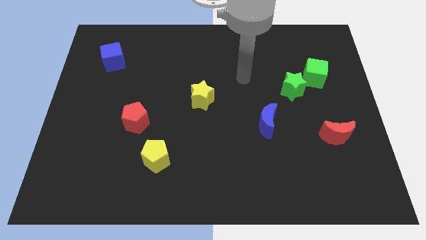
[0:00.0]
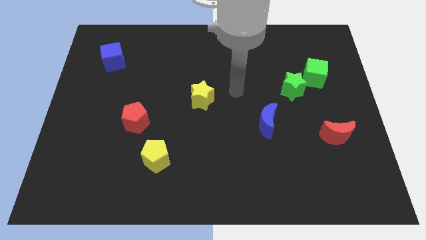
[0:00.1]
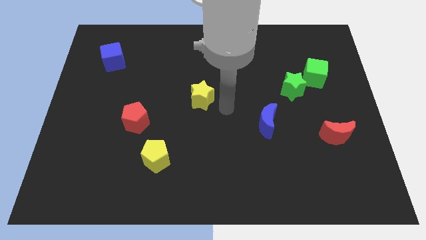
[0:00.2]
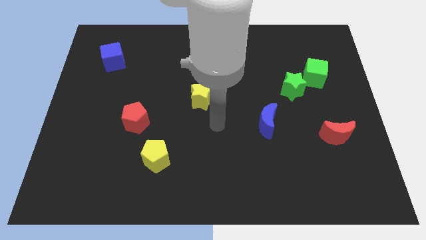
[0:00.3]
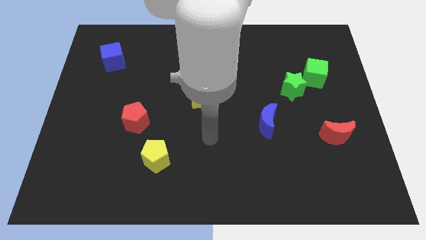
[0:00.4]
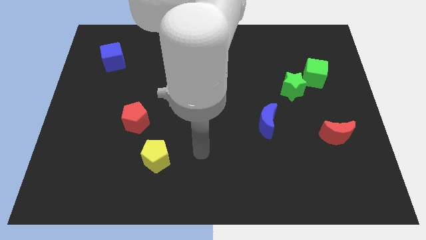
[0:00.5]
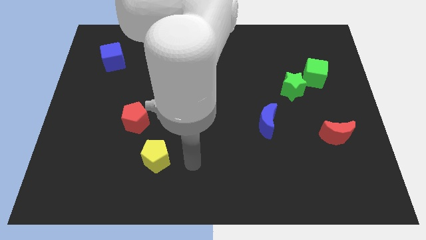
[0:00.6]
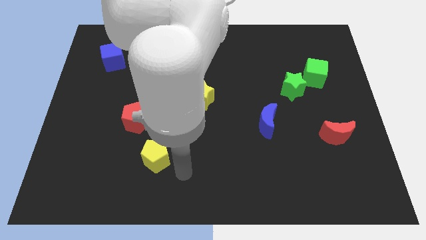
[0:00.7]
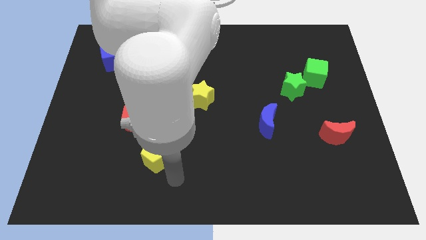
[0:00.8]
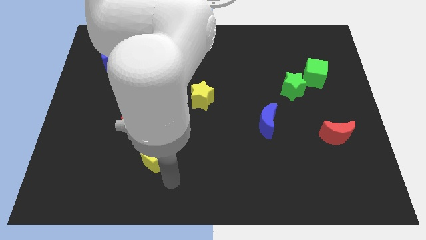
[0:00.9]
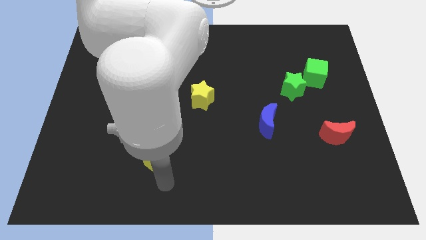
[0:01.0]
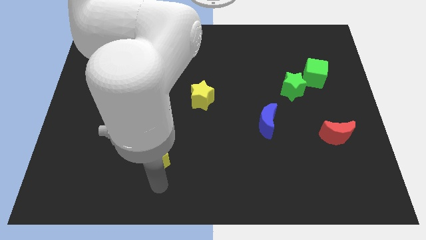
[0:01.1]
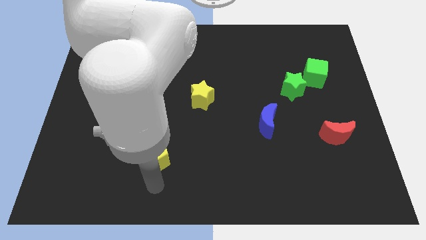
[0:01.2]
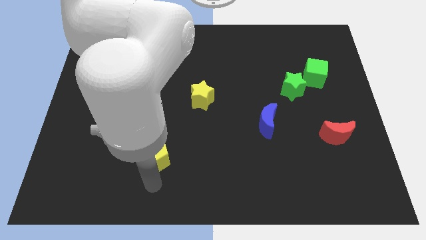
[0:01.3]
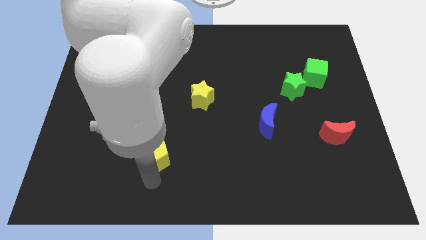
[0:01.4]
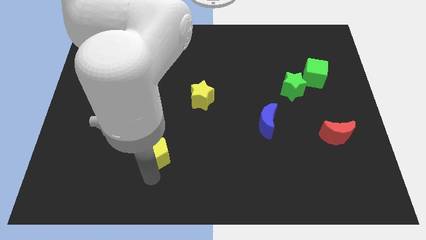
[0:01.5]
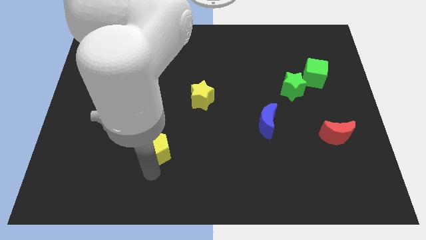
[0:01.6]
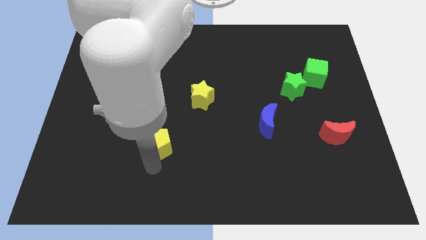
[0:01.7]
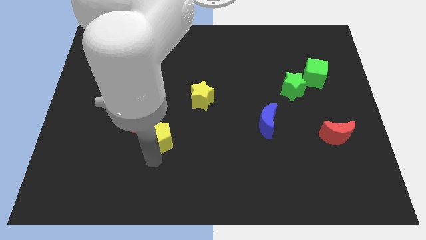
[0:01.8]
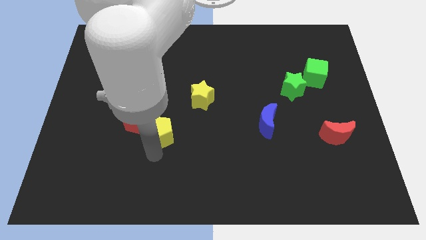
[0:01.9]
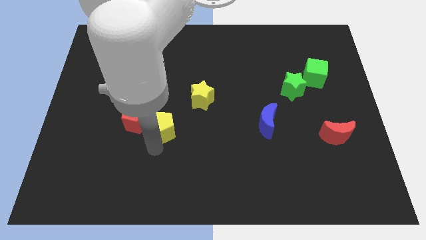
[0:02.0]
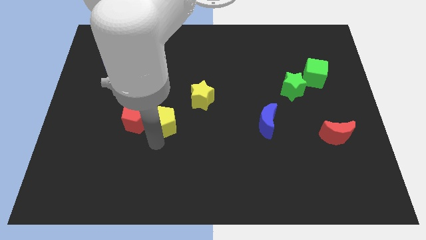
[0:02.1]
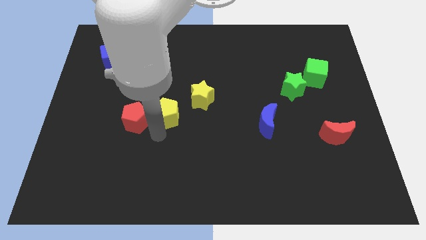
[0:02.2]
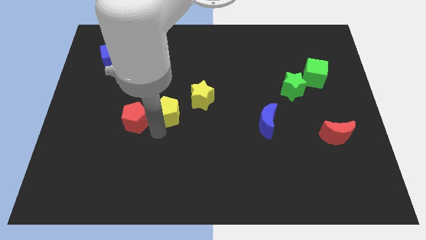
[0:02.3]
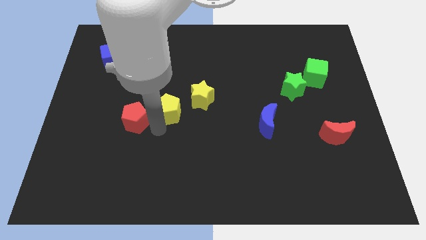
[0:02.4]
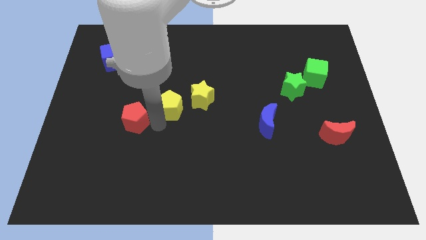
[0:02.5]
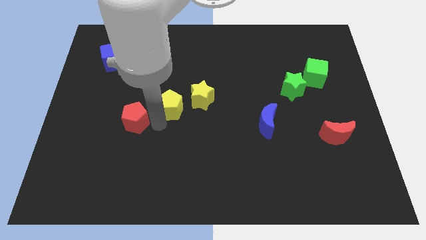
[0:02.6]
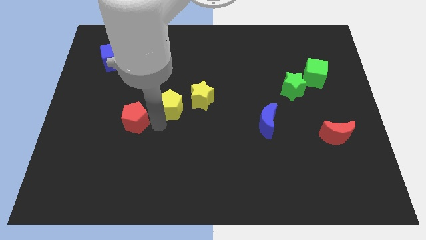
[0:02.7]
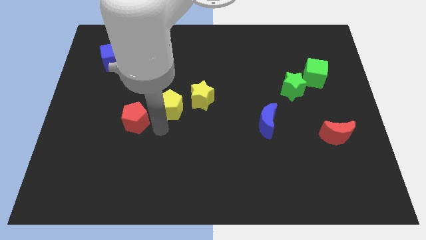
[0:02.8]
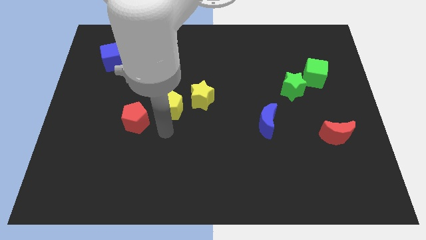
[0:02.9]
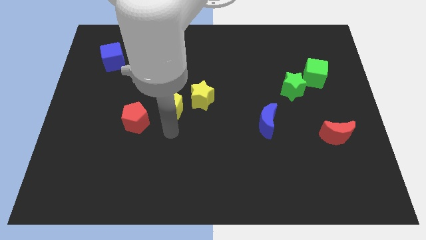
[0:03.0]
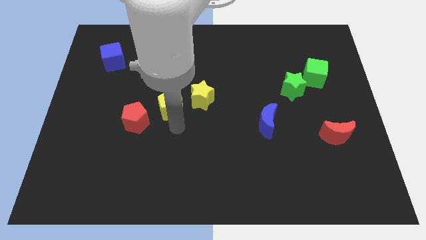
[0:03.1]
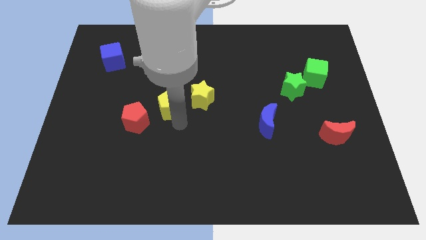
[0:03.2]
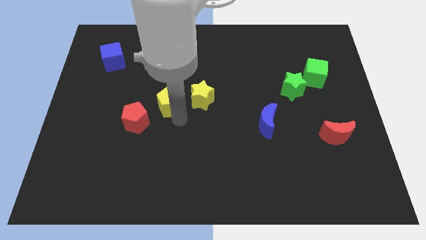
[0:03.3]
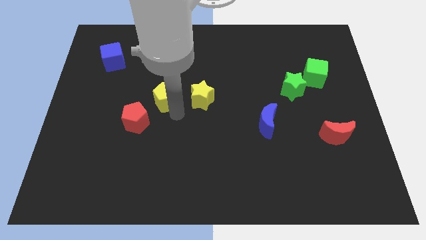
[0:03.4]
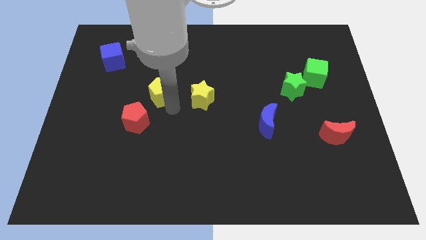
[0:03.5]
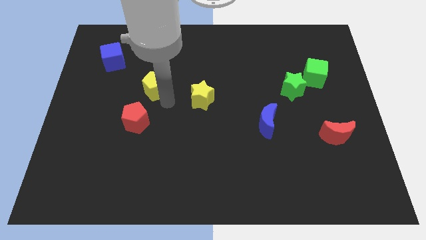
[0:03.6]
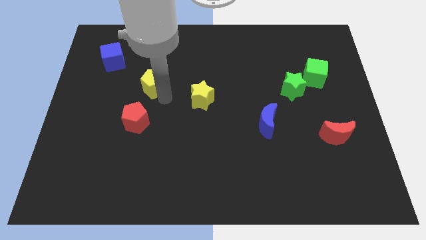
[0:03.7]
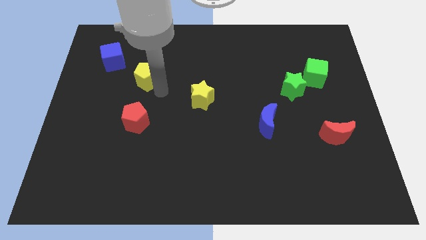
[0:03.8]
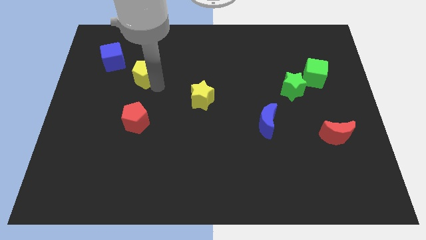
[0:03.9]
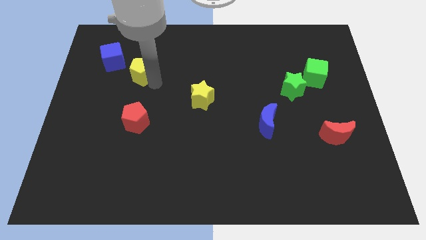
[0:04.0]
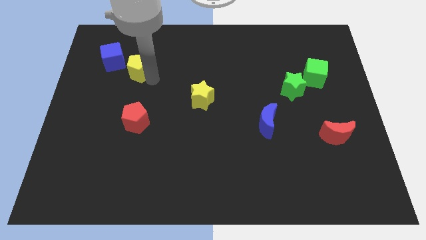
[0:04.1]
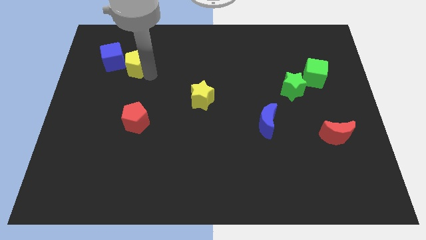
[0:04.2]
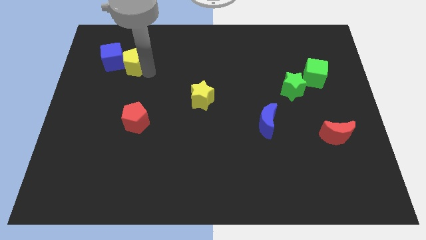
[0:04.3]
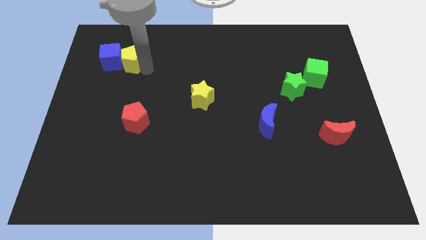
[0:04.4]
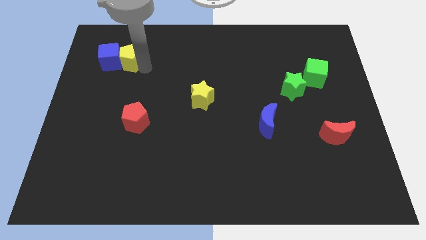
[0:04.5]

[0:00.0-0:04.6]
put the yellow pentagon next to the blue cube

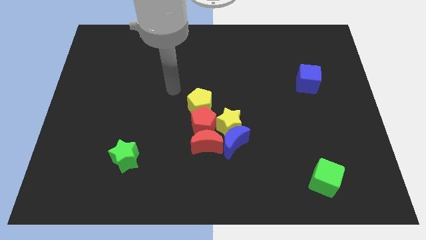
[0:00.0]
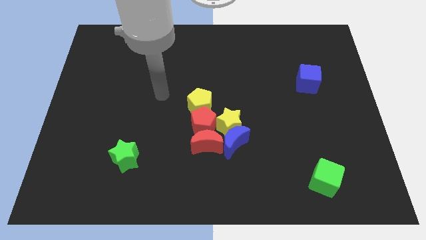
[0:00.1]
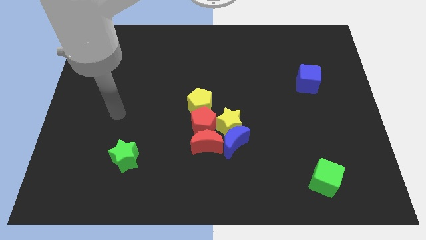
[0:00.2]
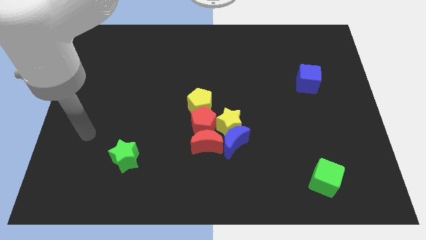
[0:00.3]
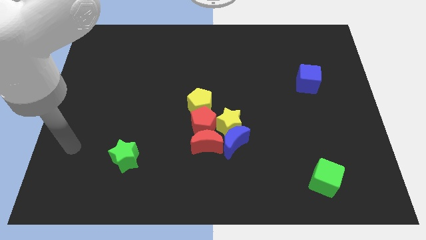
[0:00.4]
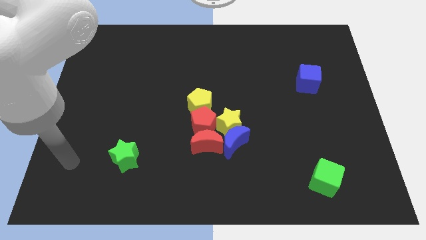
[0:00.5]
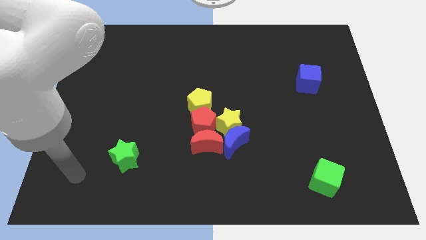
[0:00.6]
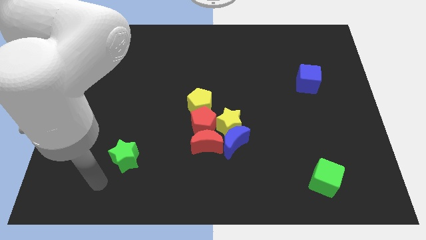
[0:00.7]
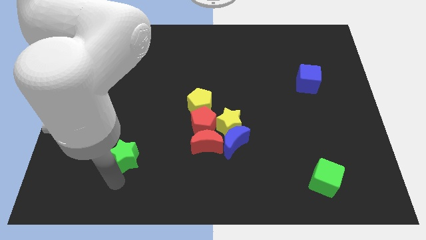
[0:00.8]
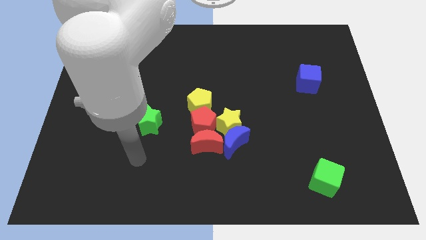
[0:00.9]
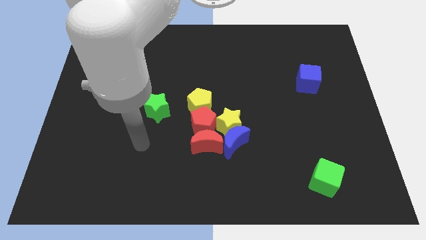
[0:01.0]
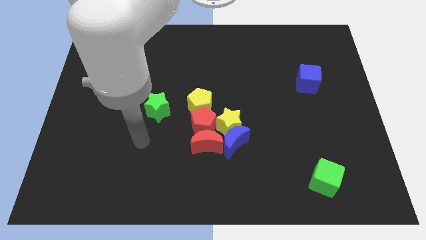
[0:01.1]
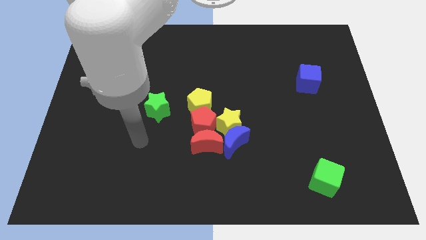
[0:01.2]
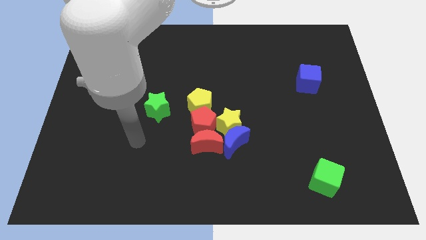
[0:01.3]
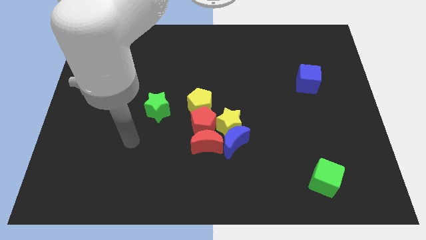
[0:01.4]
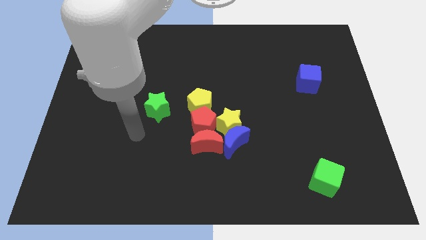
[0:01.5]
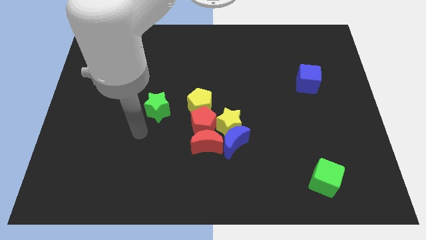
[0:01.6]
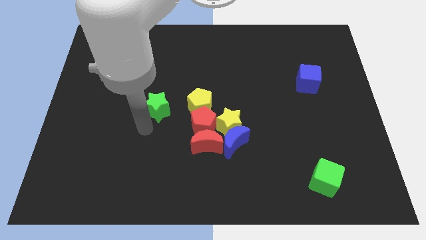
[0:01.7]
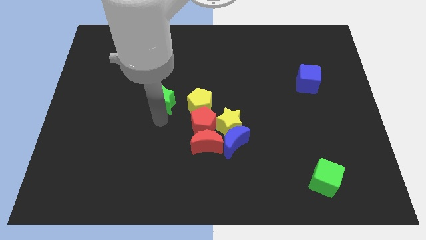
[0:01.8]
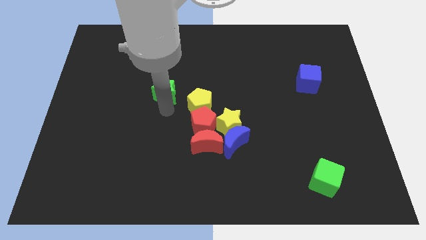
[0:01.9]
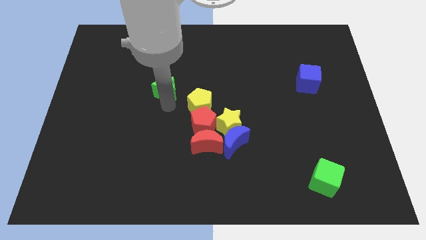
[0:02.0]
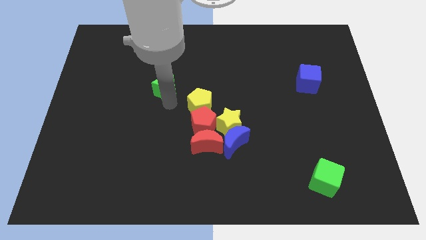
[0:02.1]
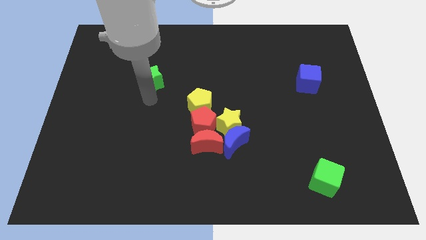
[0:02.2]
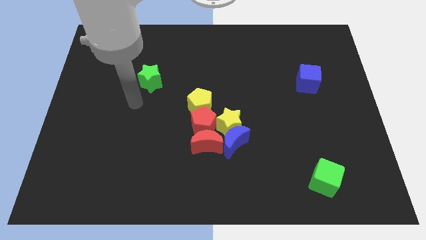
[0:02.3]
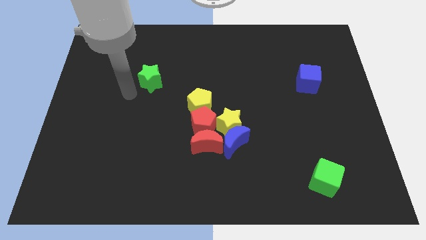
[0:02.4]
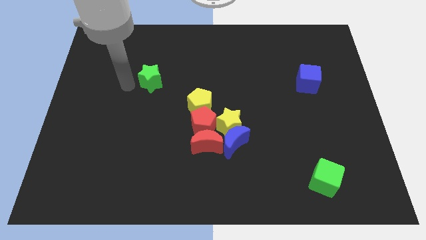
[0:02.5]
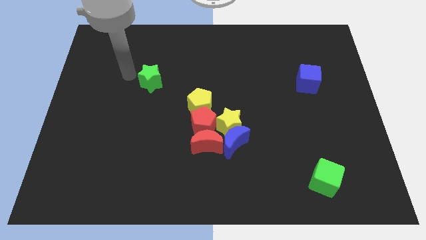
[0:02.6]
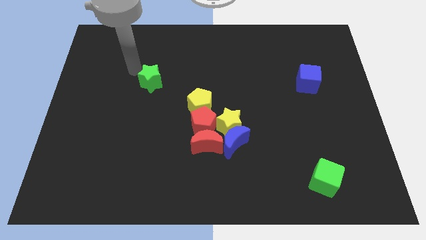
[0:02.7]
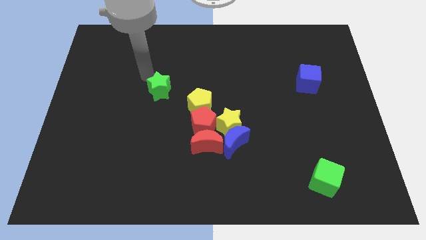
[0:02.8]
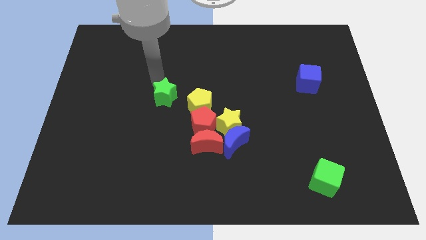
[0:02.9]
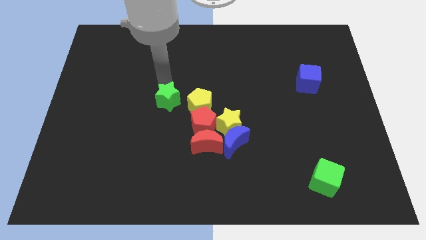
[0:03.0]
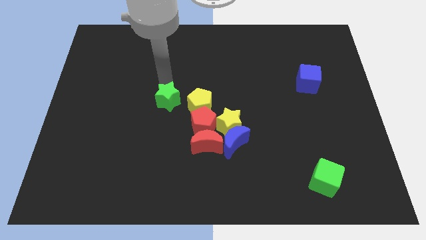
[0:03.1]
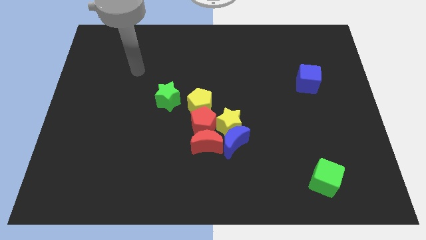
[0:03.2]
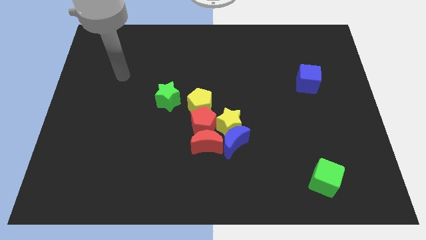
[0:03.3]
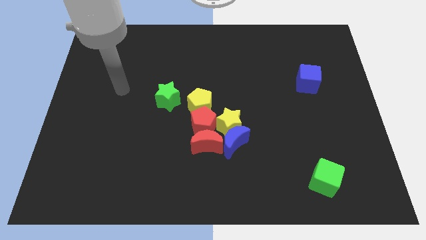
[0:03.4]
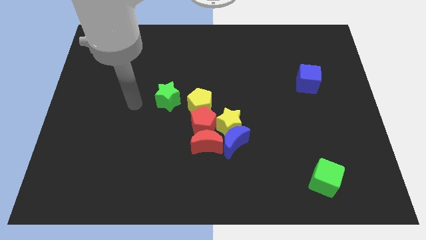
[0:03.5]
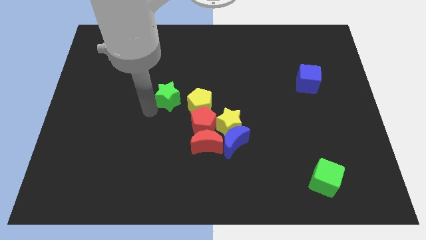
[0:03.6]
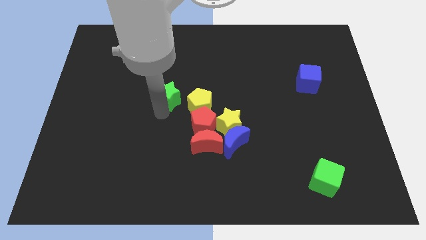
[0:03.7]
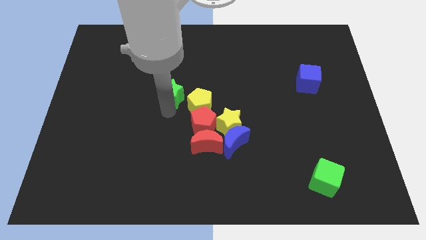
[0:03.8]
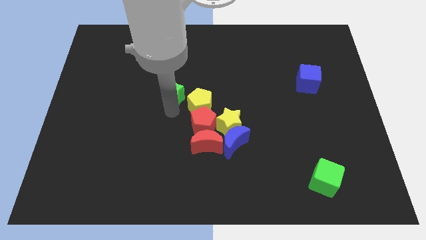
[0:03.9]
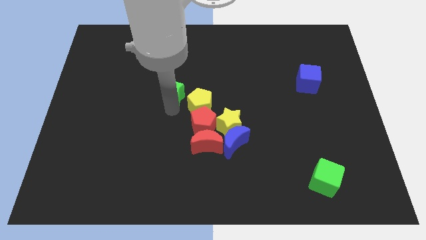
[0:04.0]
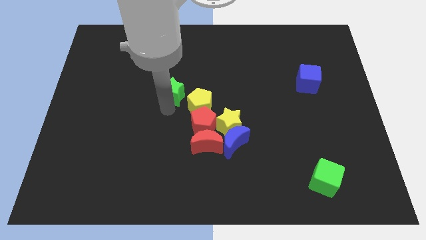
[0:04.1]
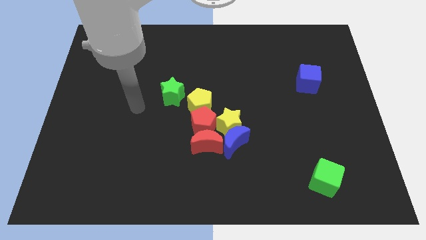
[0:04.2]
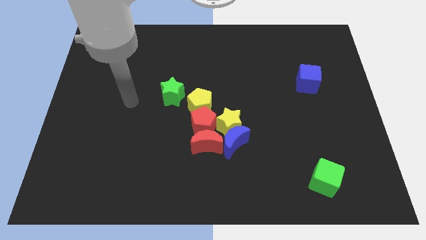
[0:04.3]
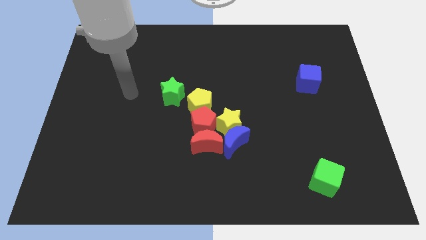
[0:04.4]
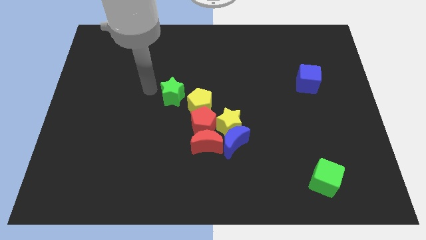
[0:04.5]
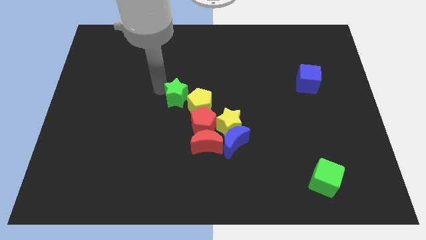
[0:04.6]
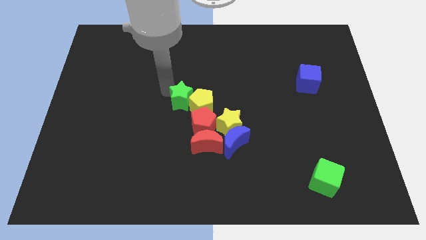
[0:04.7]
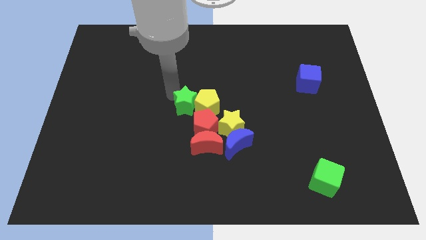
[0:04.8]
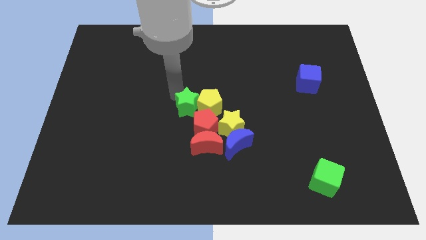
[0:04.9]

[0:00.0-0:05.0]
put the green star towards the yellow pentagon
